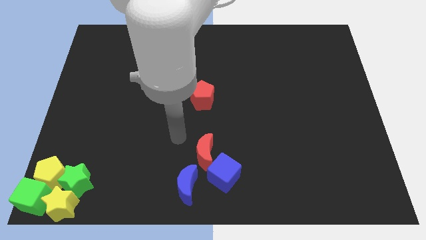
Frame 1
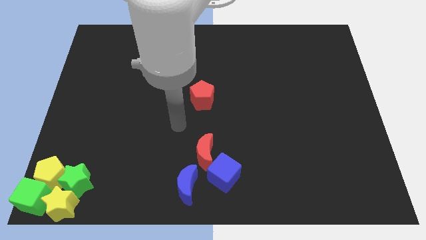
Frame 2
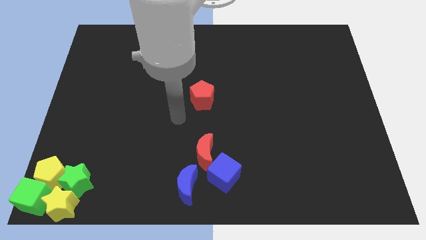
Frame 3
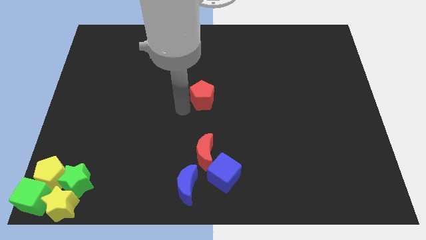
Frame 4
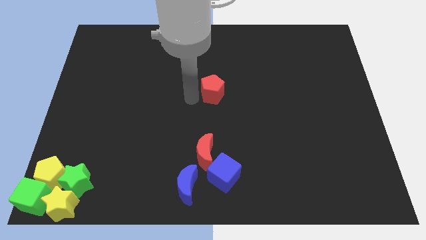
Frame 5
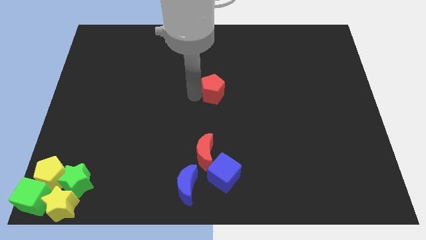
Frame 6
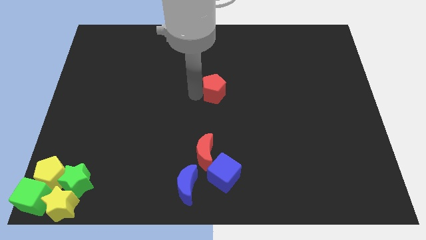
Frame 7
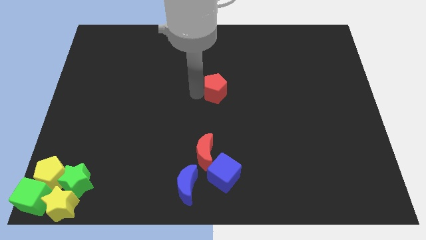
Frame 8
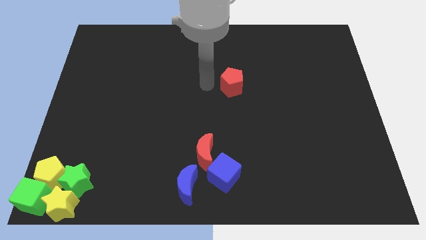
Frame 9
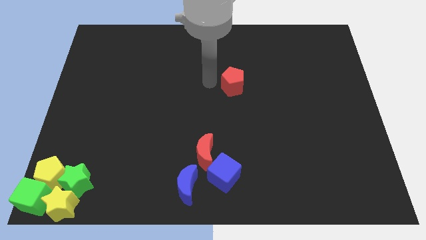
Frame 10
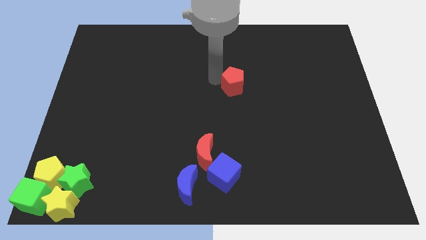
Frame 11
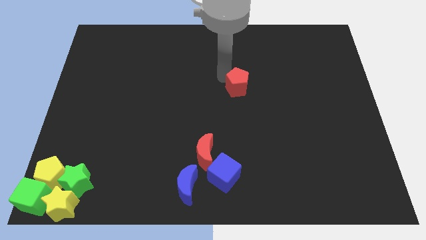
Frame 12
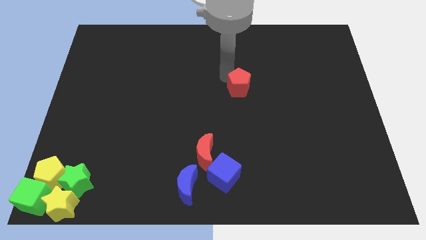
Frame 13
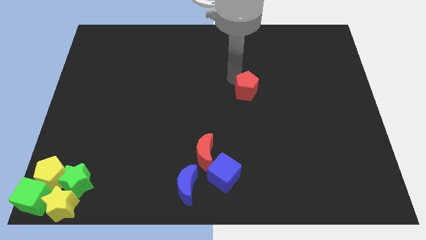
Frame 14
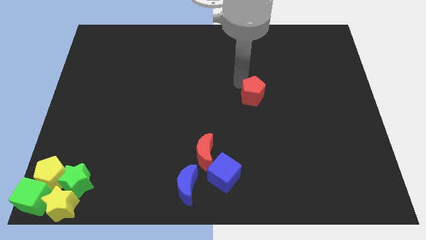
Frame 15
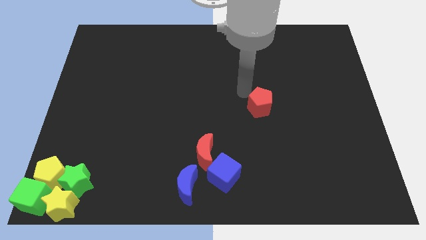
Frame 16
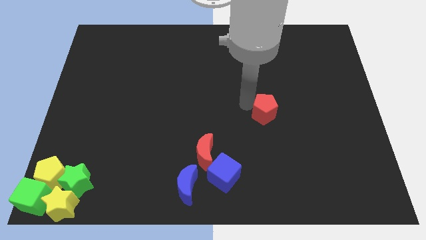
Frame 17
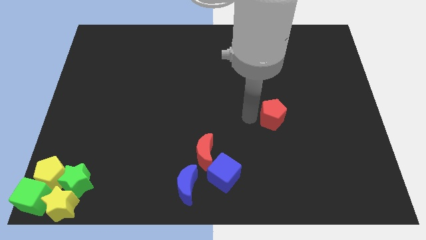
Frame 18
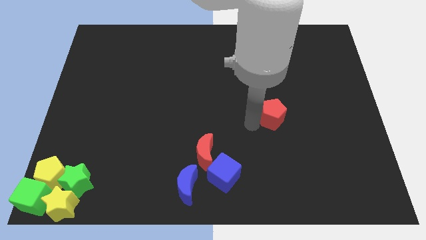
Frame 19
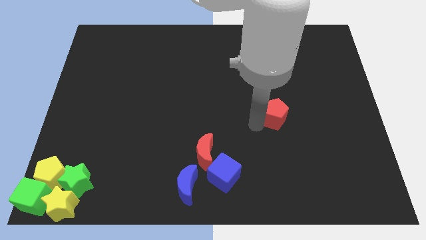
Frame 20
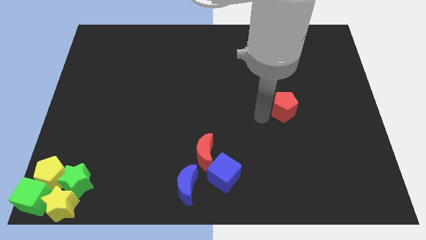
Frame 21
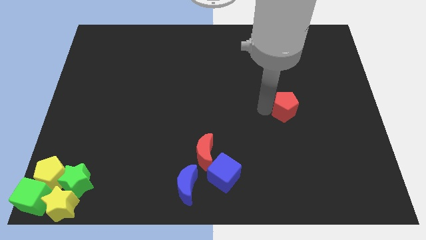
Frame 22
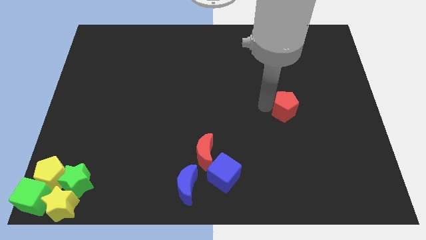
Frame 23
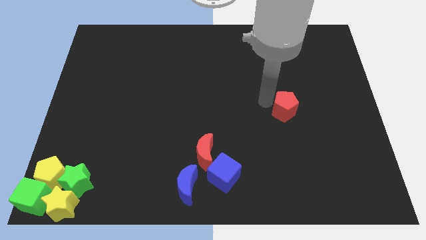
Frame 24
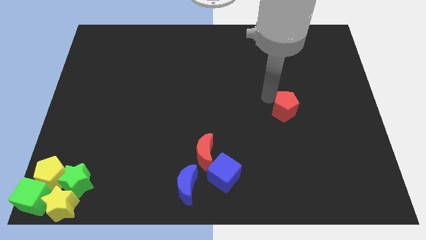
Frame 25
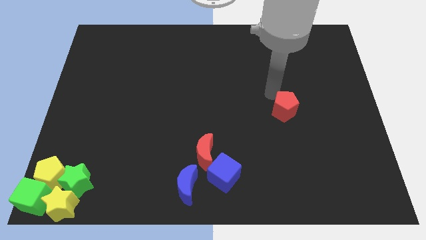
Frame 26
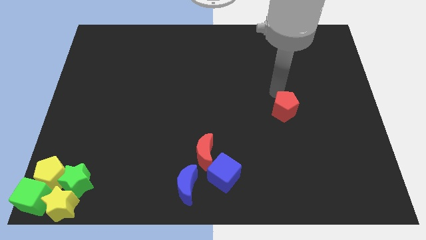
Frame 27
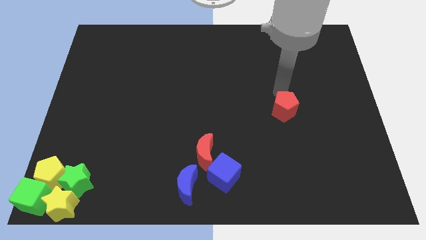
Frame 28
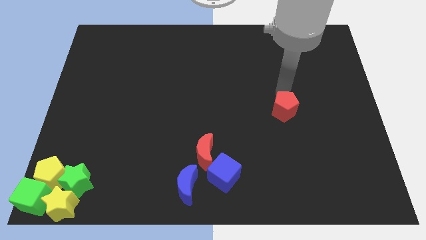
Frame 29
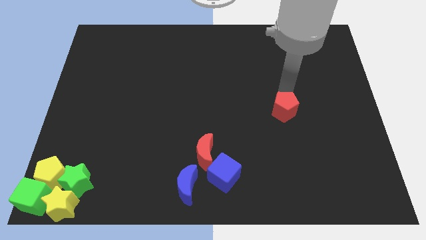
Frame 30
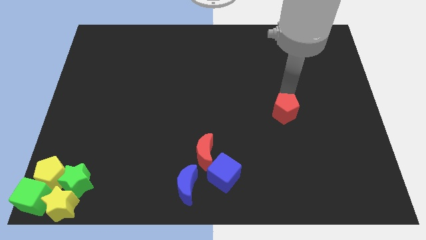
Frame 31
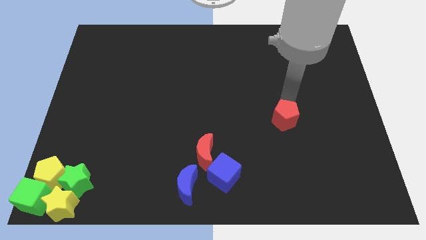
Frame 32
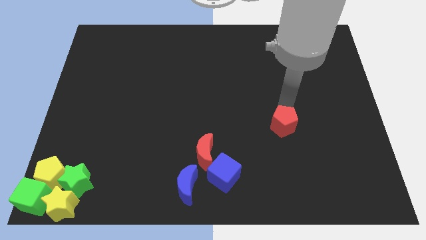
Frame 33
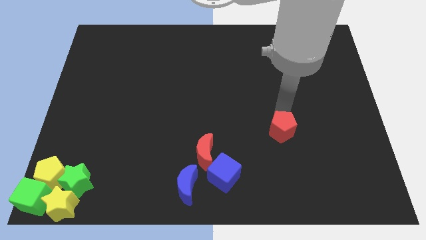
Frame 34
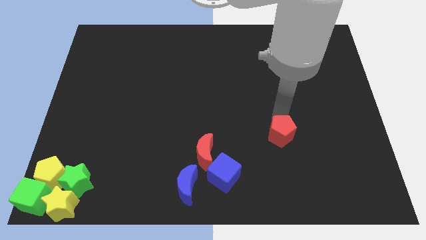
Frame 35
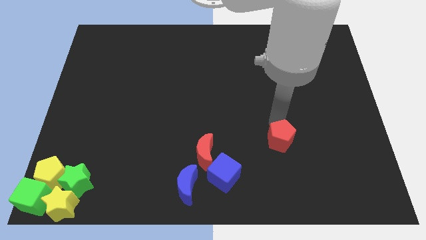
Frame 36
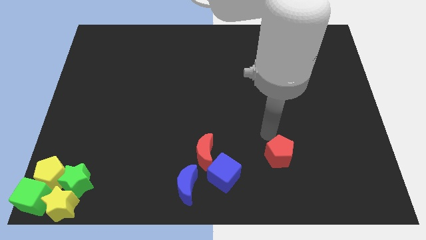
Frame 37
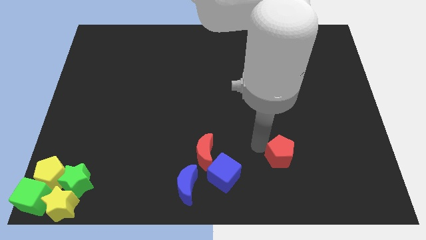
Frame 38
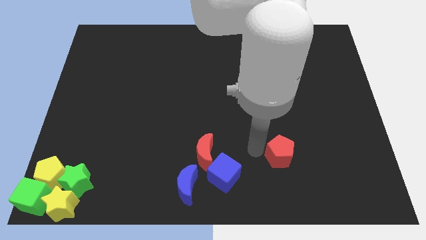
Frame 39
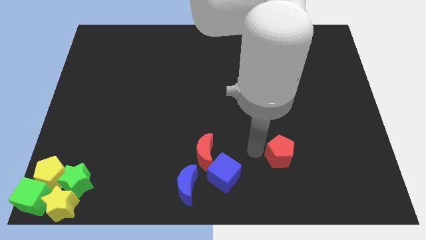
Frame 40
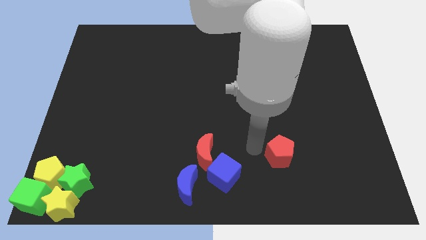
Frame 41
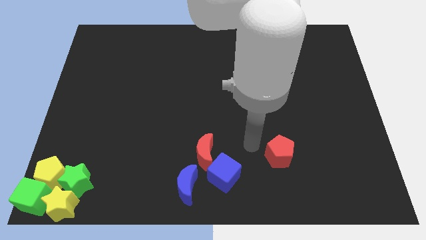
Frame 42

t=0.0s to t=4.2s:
push red pentagon downwards

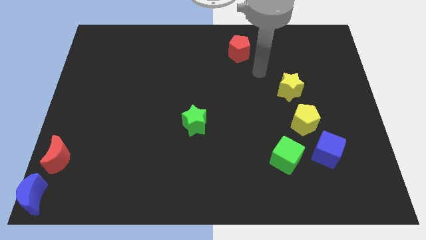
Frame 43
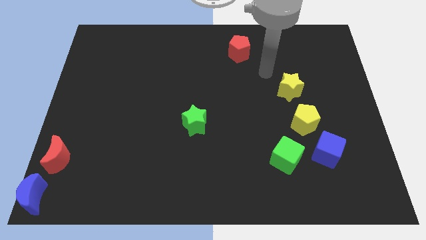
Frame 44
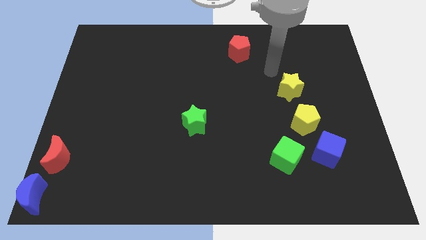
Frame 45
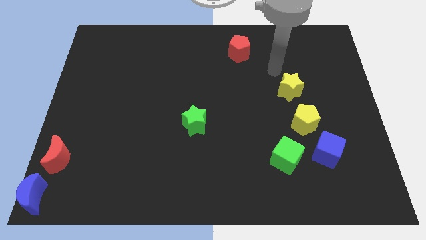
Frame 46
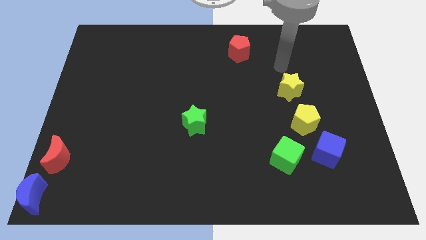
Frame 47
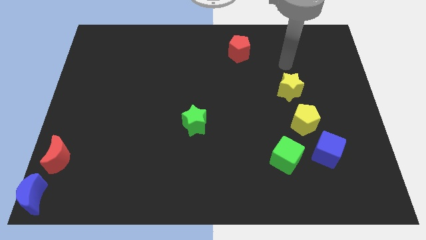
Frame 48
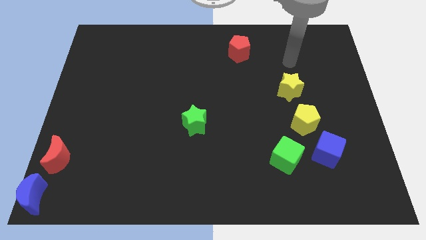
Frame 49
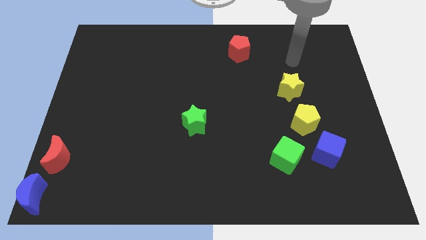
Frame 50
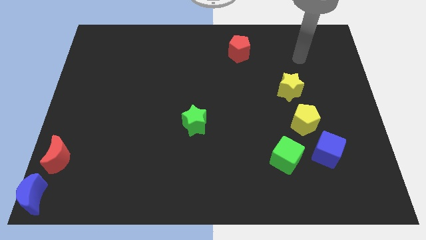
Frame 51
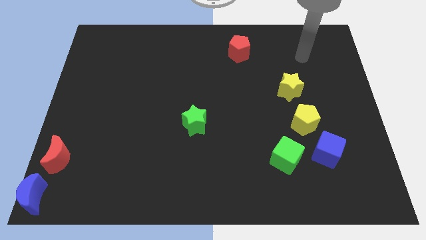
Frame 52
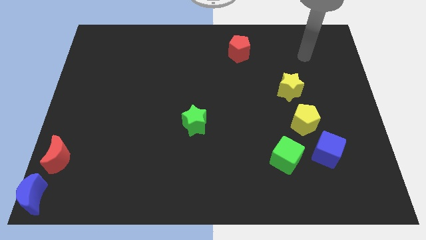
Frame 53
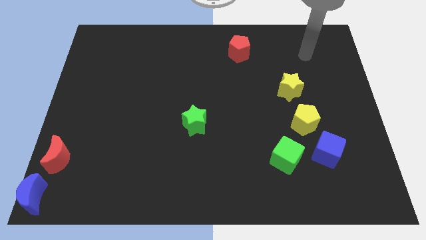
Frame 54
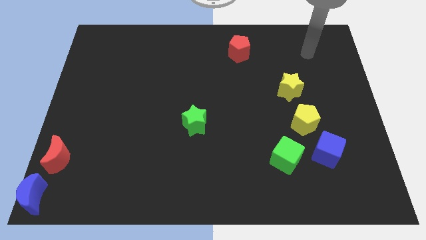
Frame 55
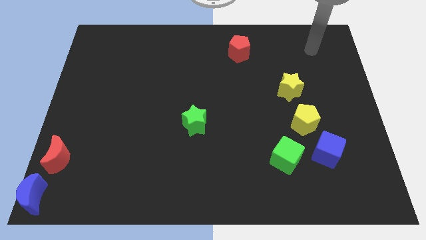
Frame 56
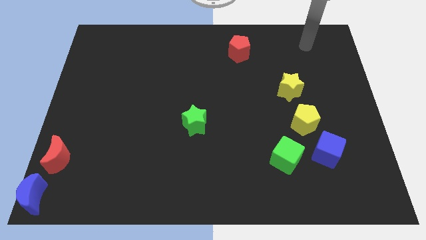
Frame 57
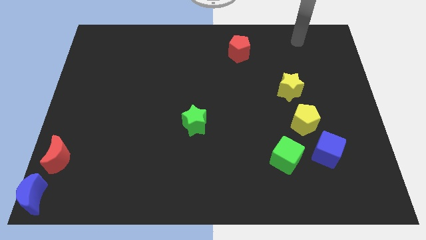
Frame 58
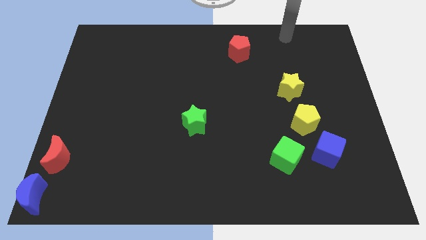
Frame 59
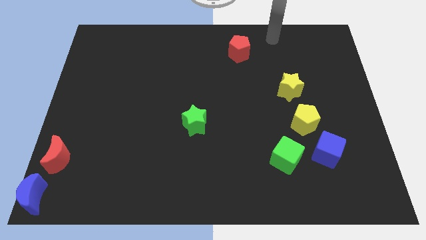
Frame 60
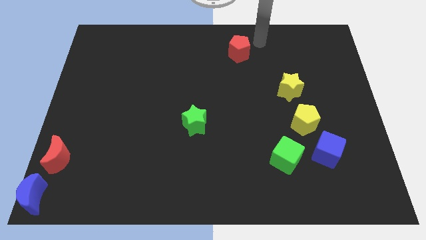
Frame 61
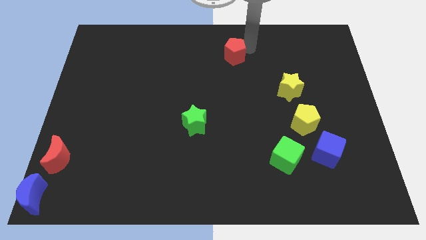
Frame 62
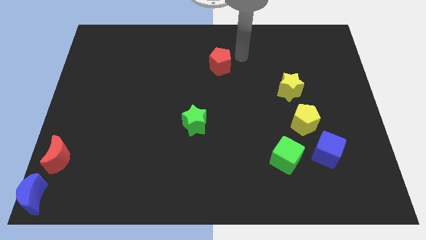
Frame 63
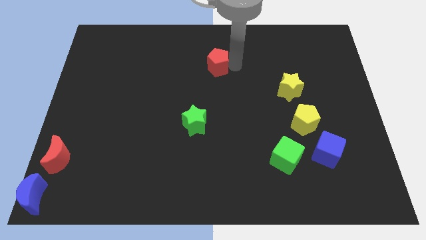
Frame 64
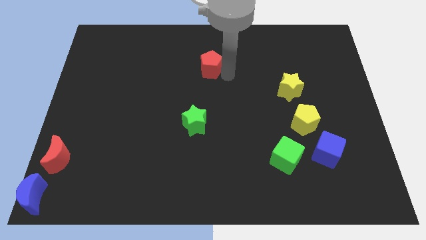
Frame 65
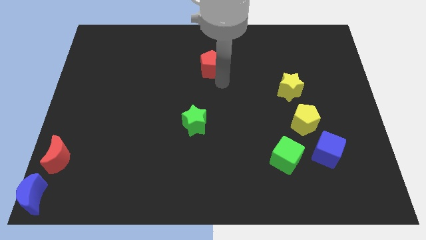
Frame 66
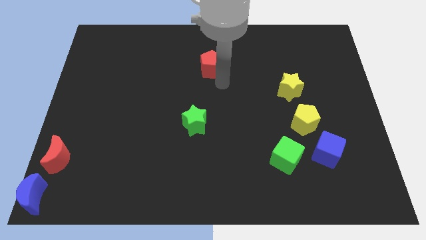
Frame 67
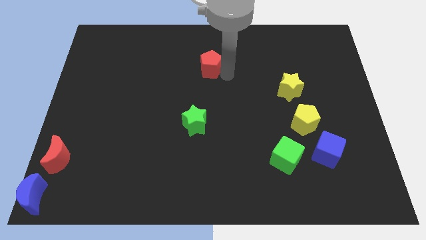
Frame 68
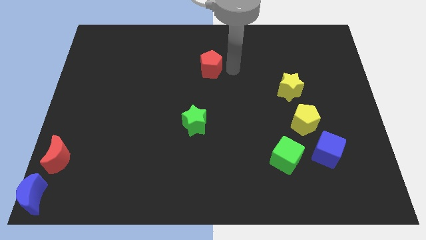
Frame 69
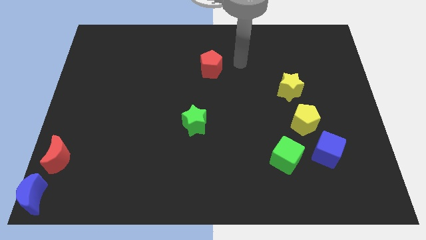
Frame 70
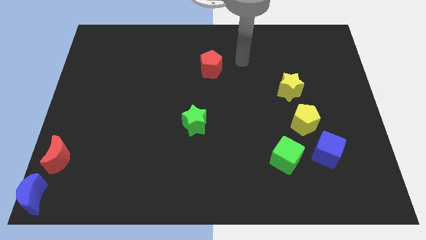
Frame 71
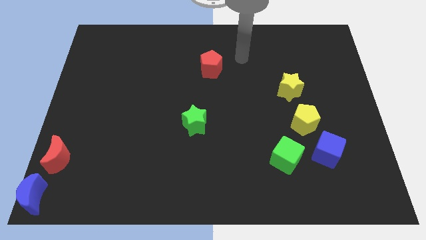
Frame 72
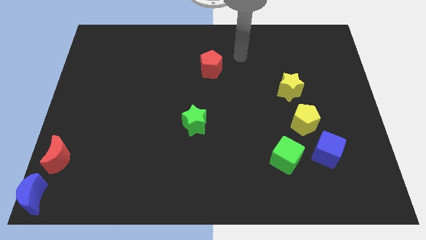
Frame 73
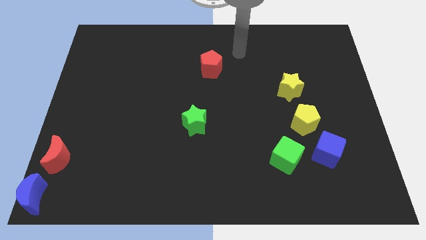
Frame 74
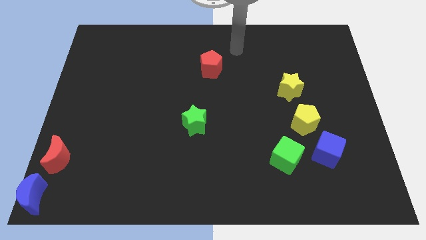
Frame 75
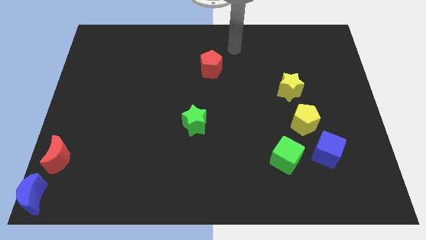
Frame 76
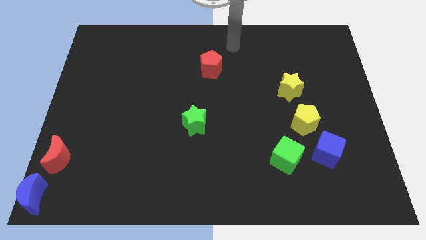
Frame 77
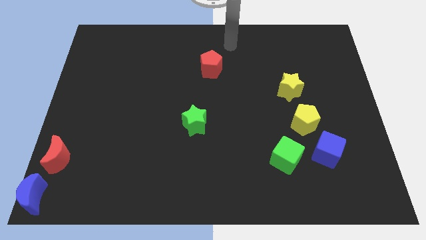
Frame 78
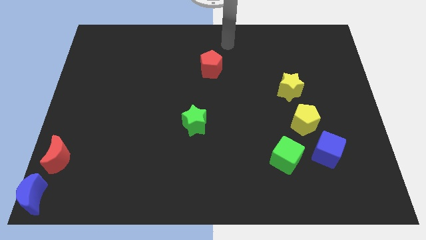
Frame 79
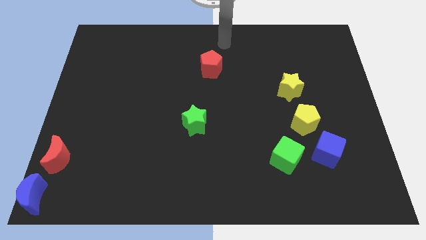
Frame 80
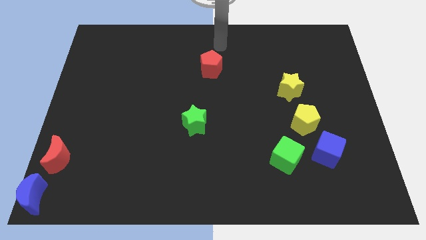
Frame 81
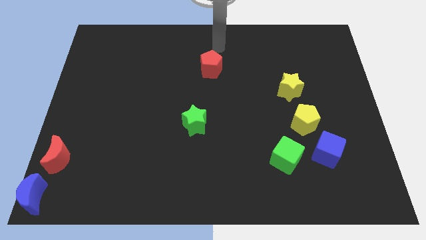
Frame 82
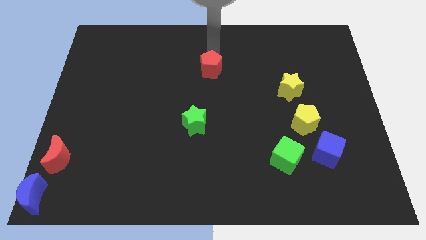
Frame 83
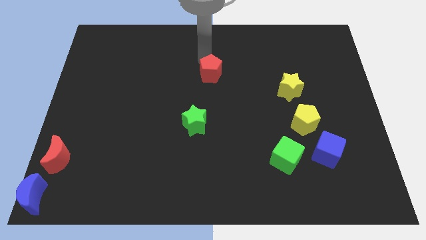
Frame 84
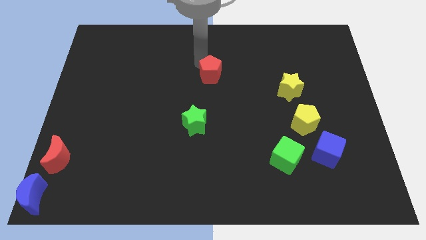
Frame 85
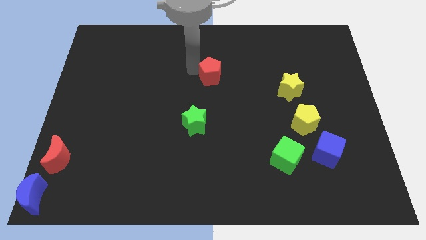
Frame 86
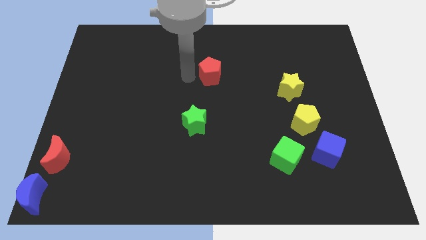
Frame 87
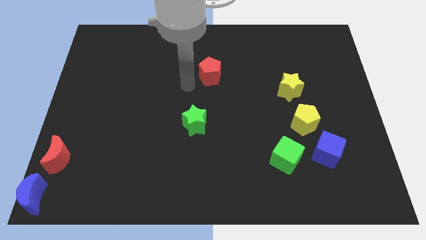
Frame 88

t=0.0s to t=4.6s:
slide the red pentagon to the top of the green star
